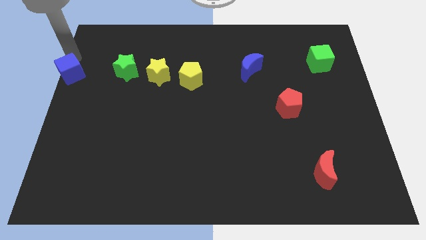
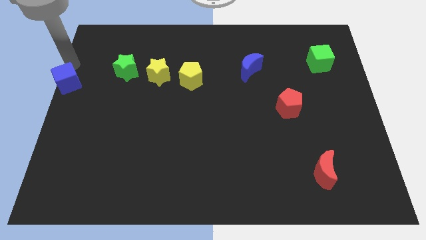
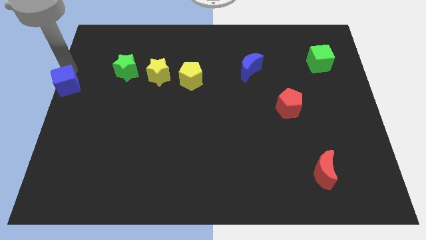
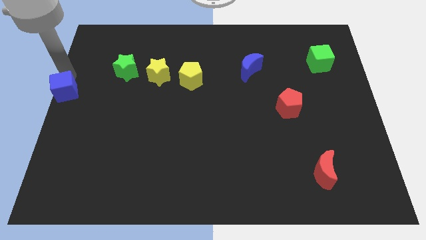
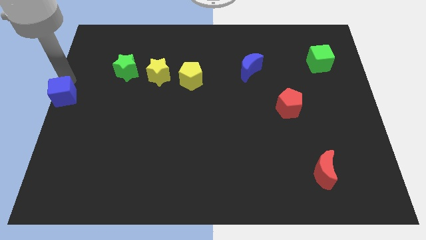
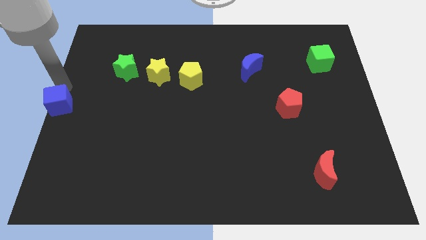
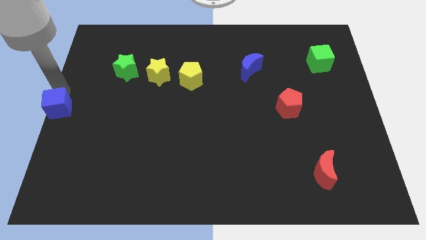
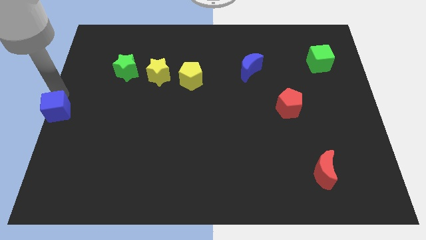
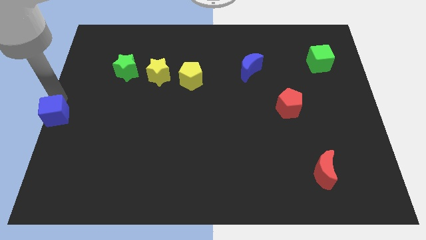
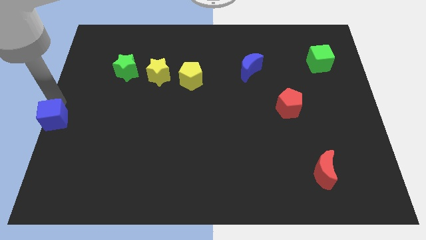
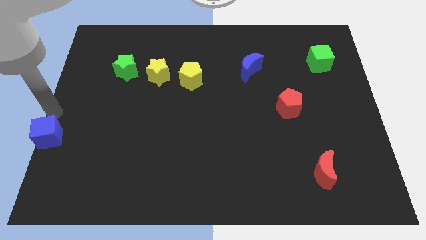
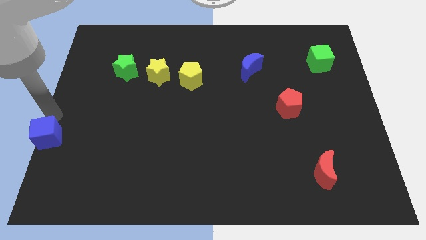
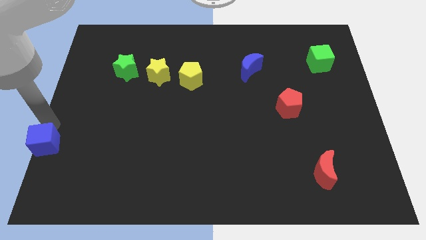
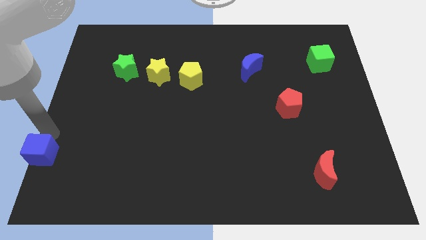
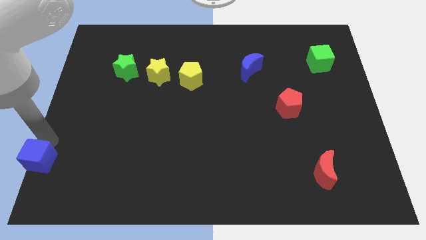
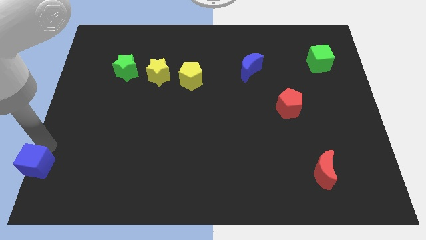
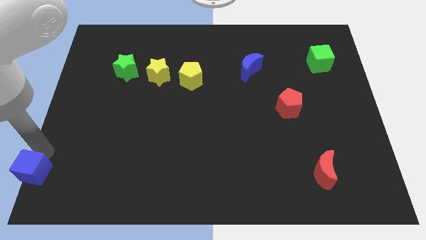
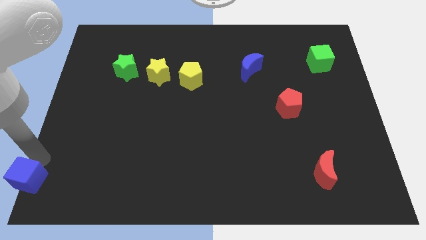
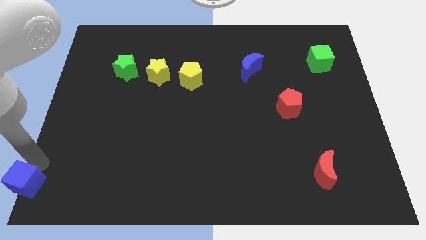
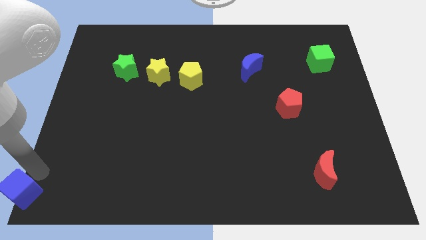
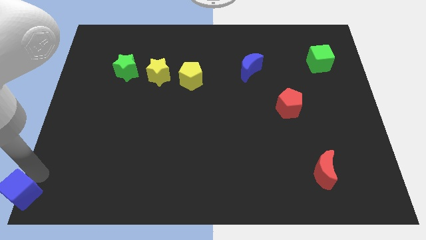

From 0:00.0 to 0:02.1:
move blue cube to the bottom left

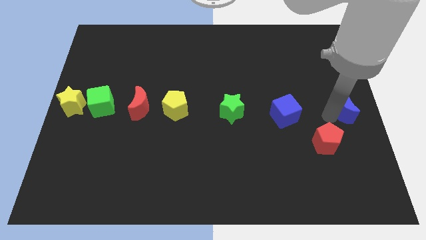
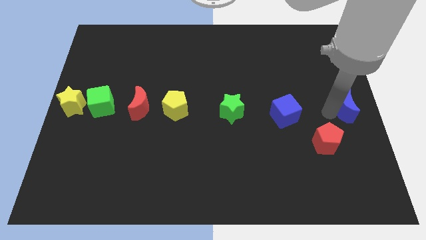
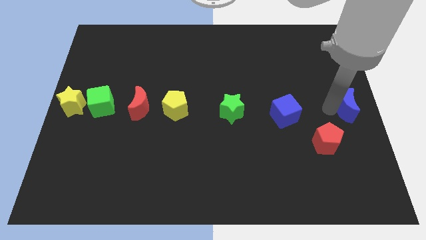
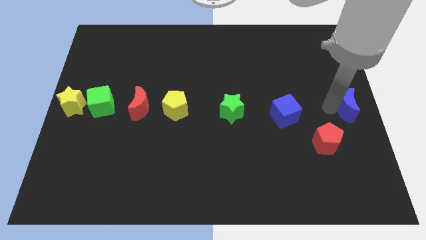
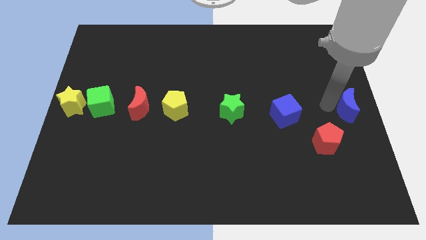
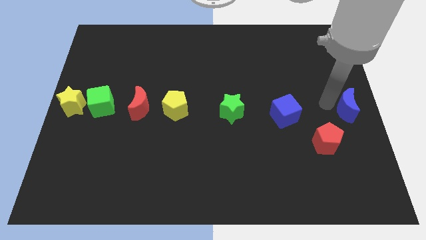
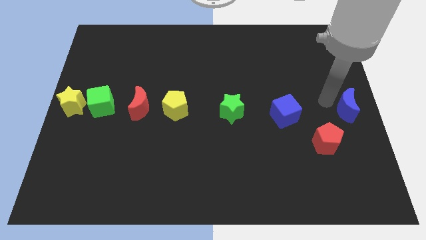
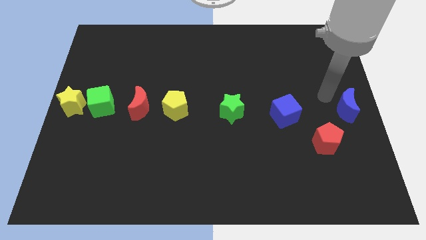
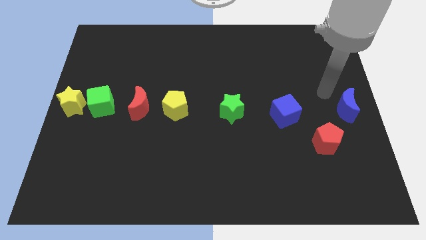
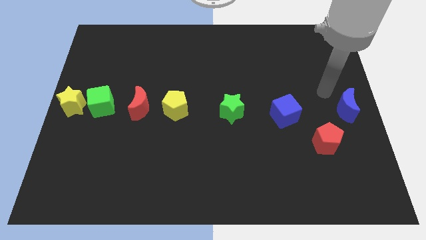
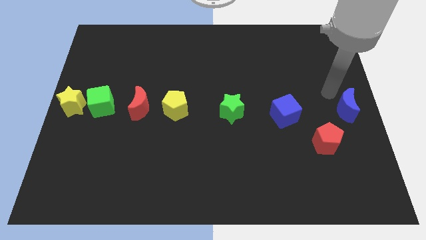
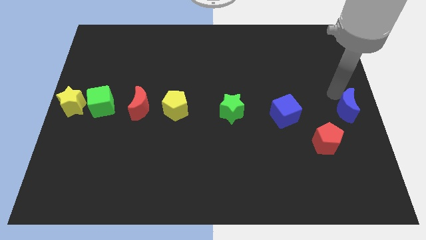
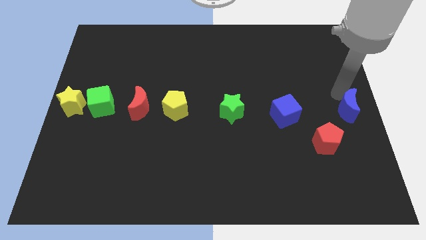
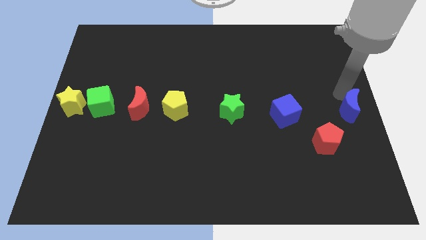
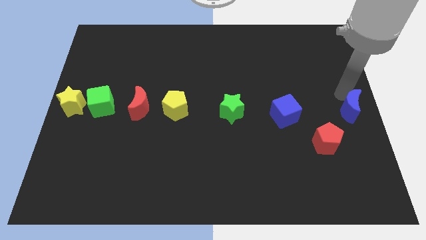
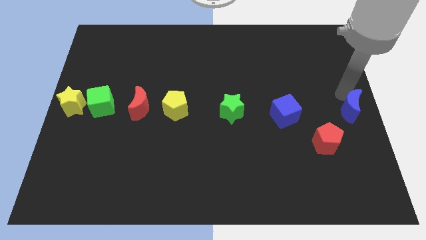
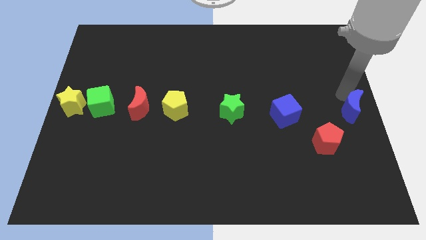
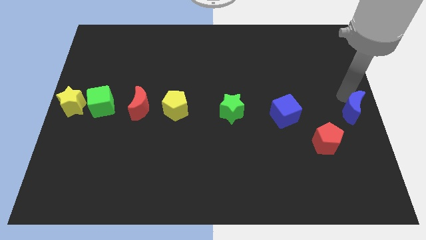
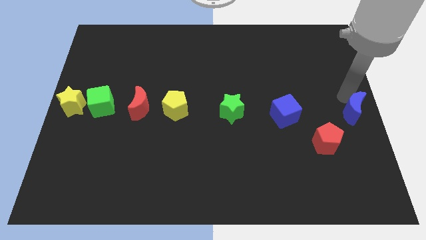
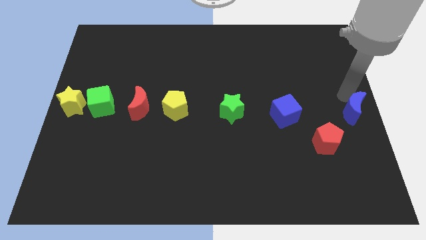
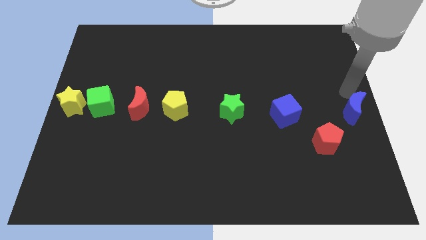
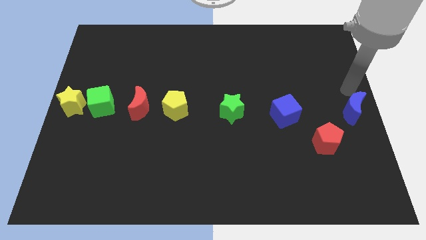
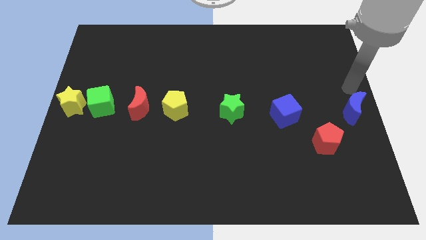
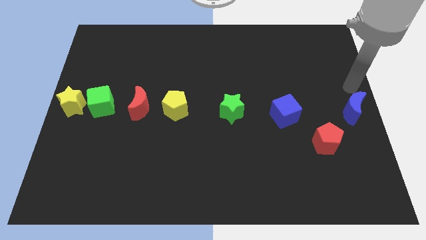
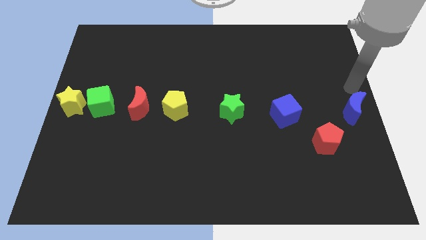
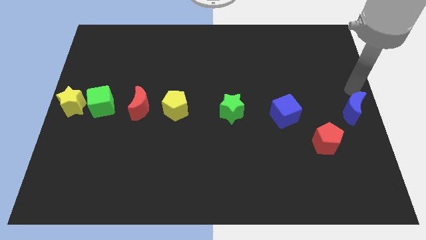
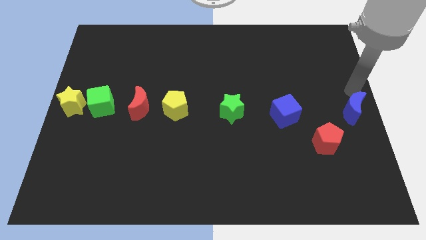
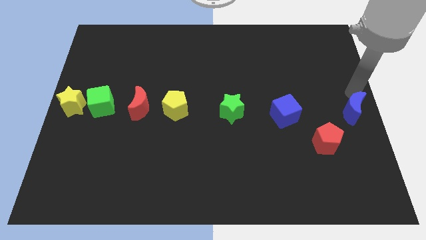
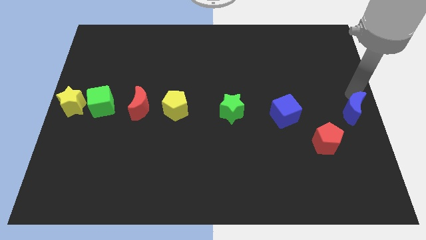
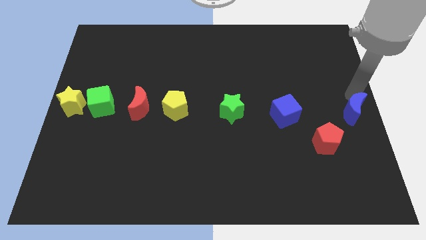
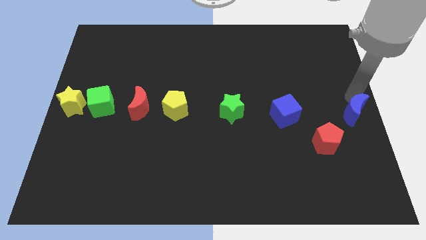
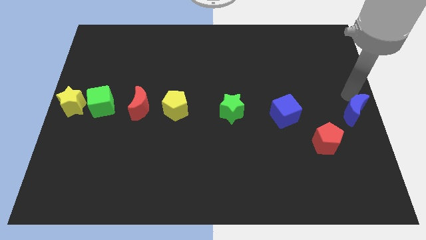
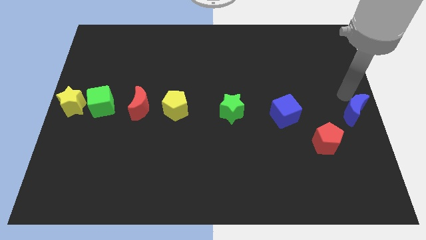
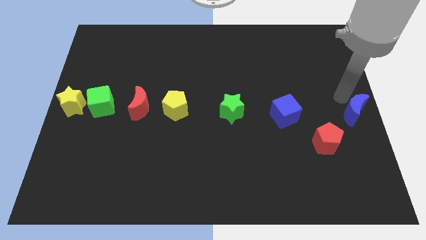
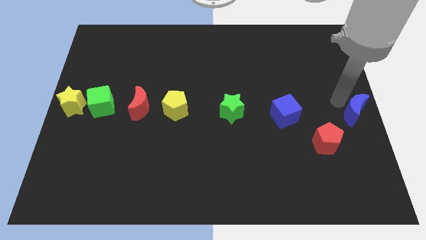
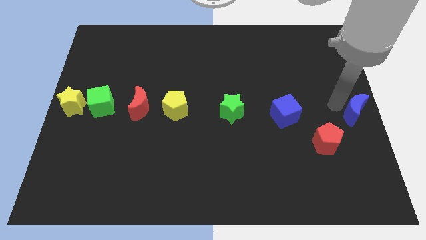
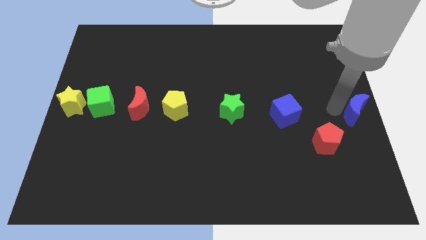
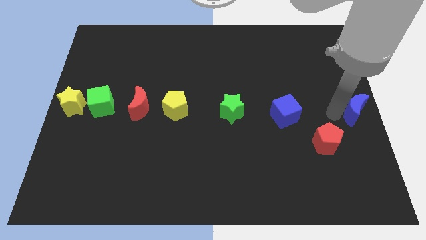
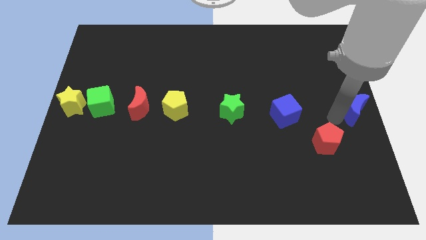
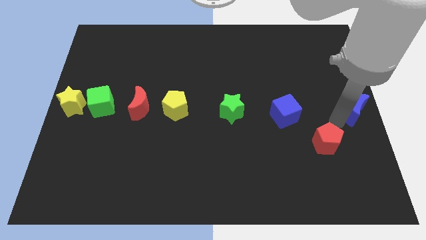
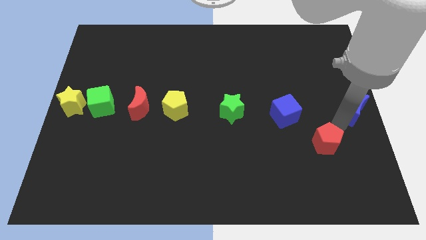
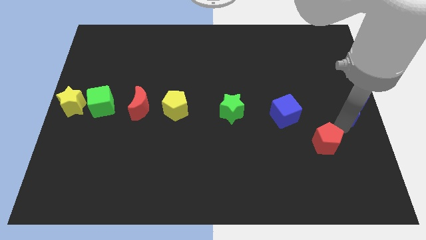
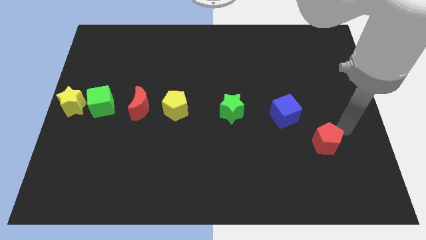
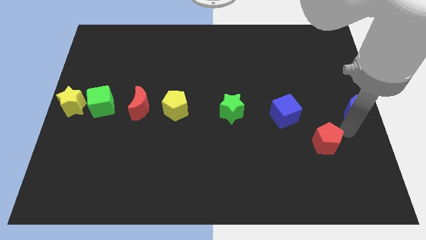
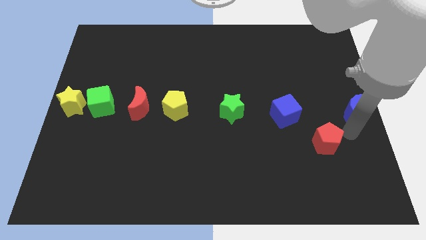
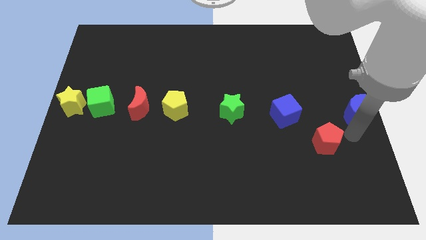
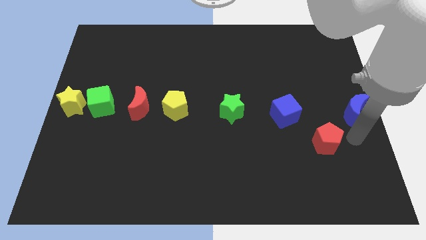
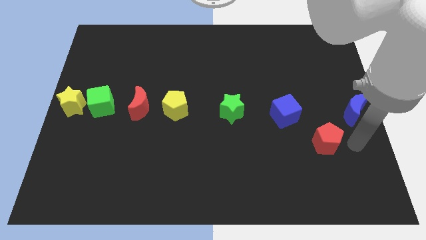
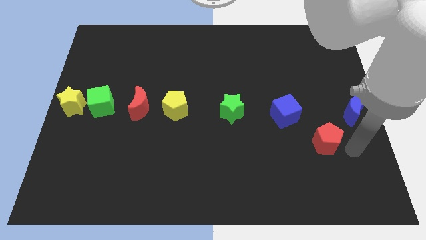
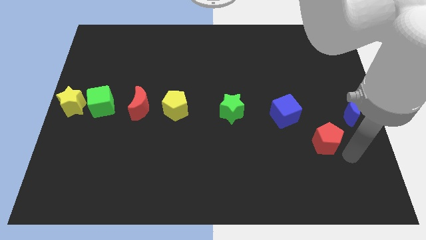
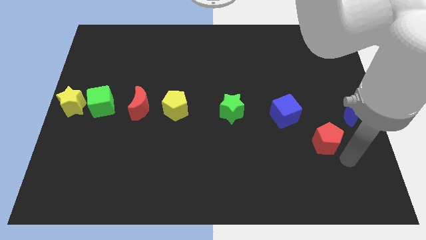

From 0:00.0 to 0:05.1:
push the blue crescent to the center right of the board

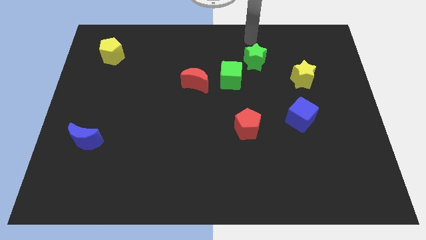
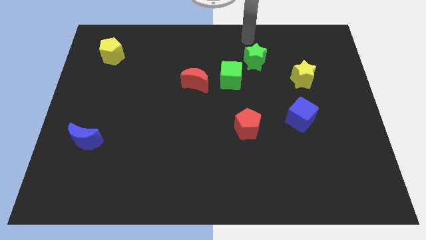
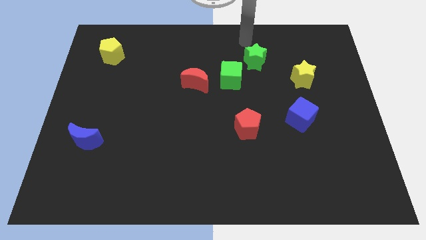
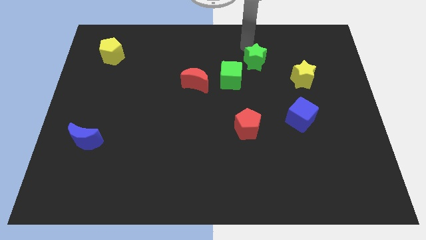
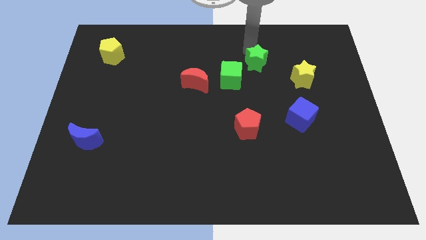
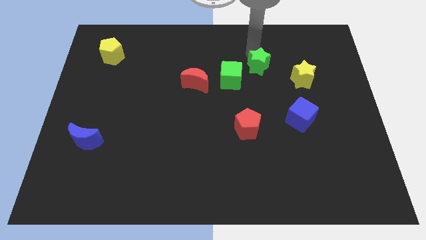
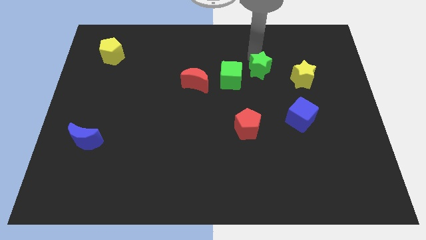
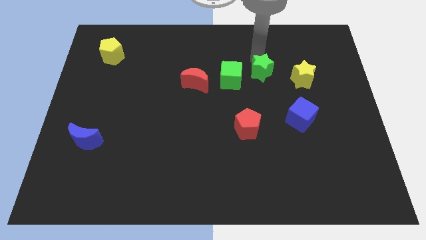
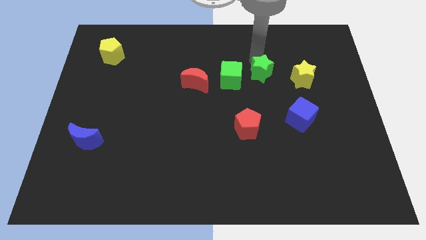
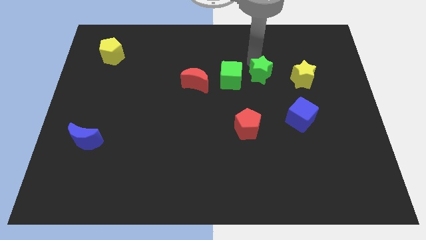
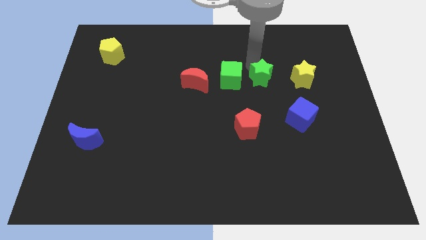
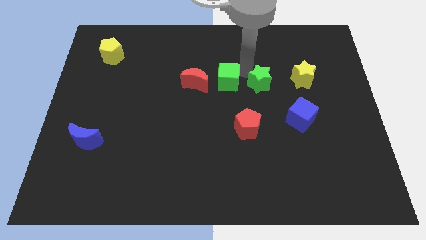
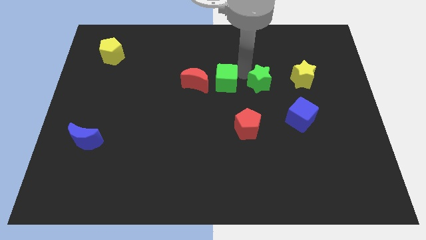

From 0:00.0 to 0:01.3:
push green star adjacent to green cube

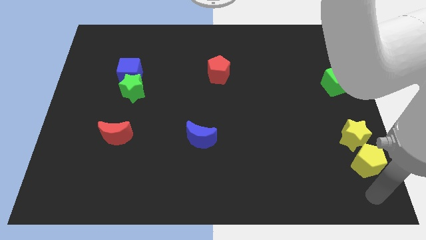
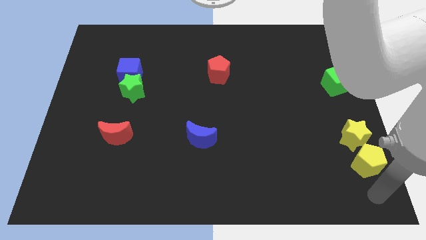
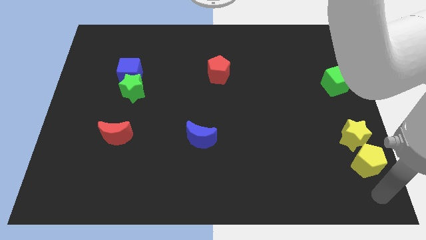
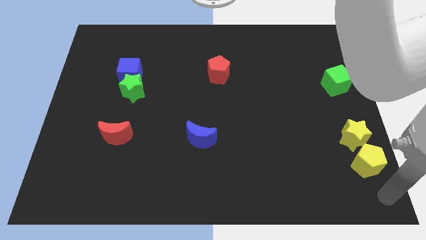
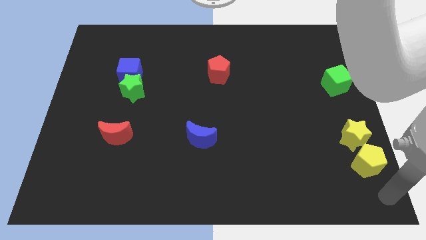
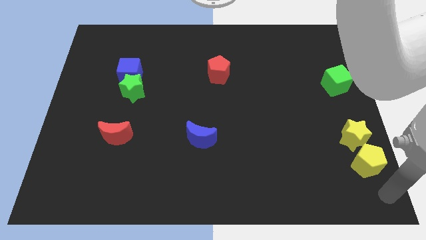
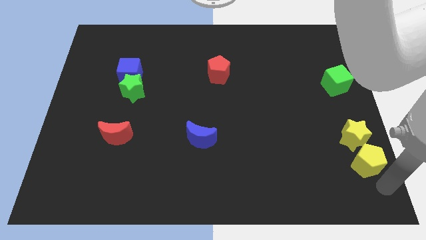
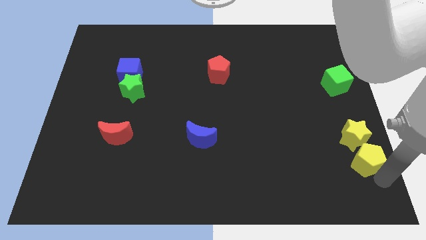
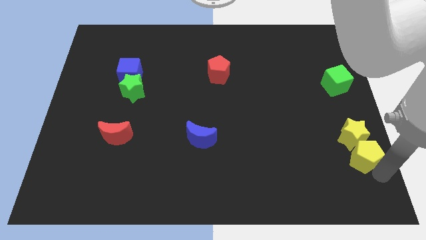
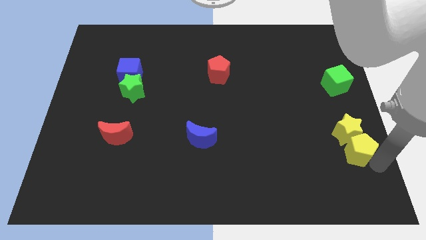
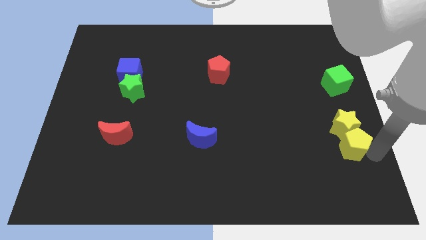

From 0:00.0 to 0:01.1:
push the yellow pentagon into the yellow star
